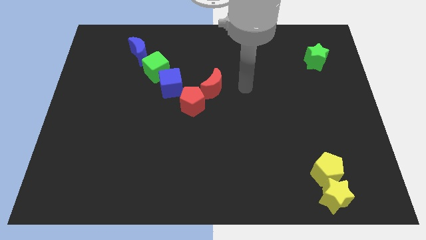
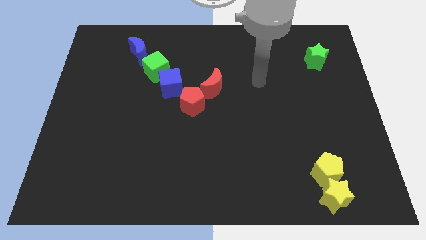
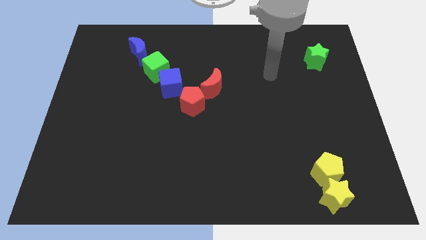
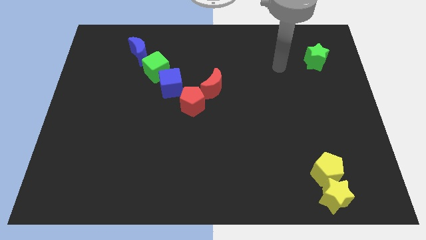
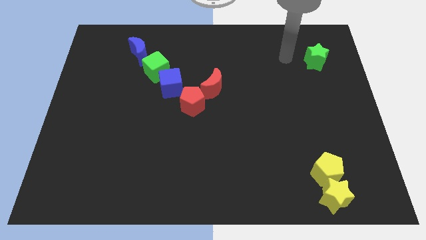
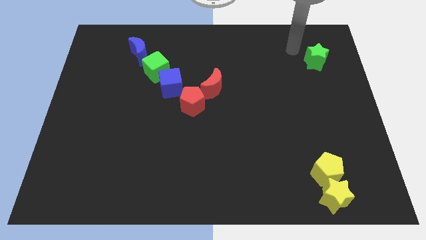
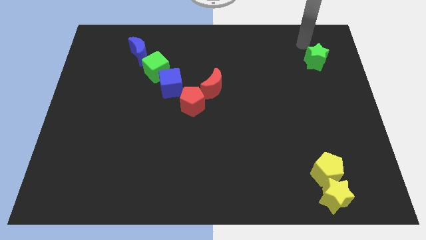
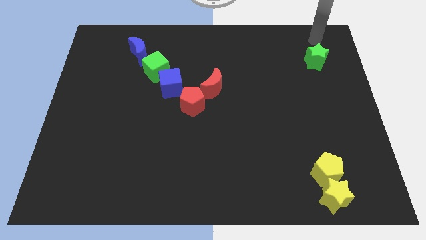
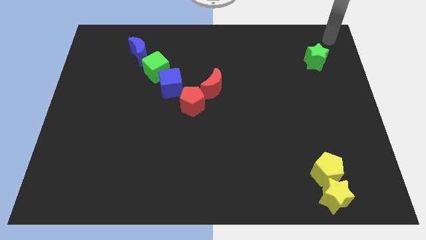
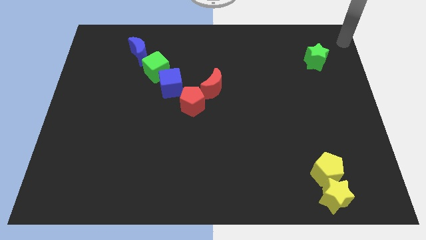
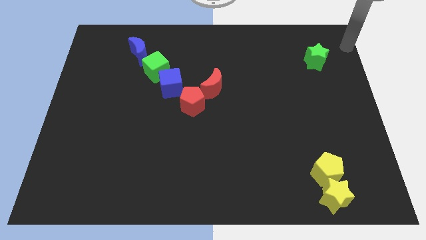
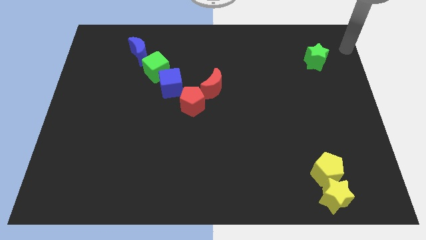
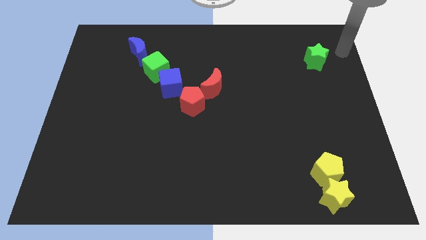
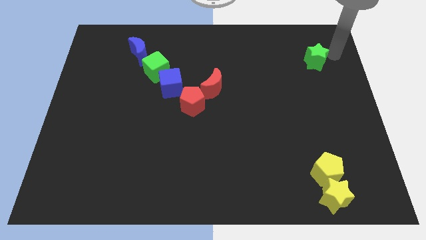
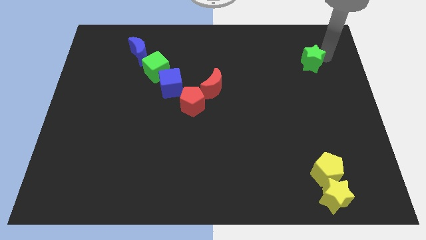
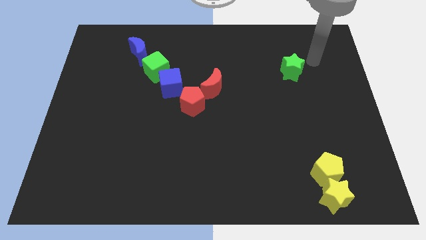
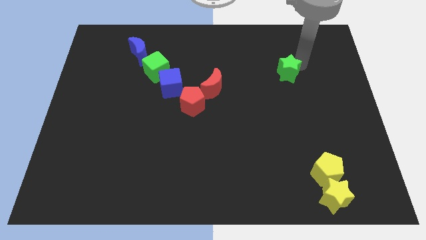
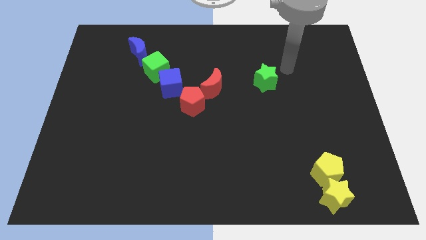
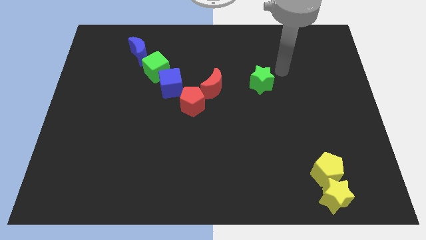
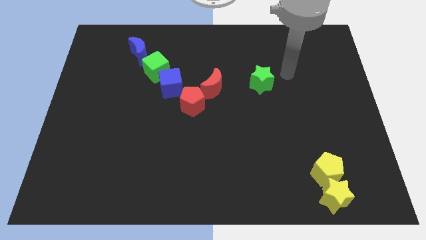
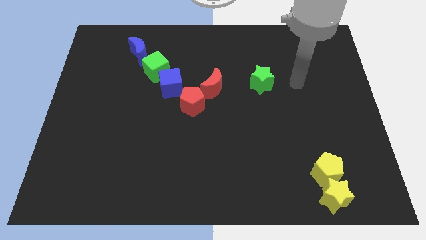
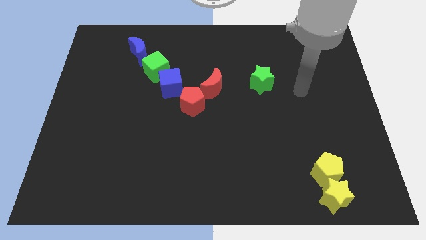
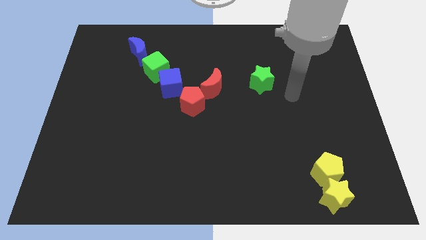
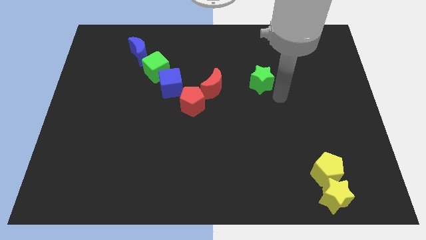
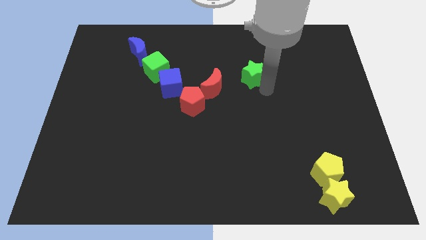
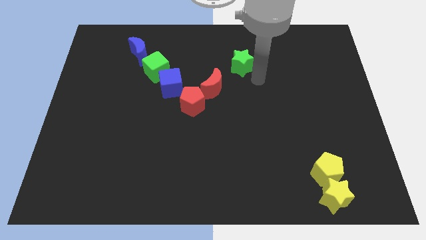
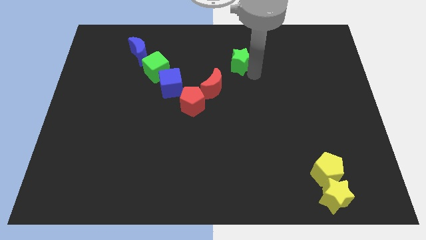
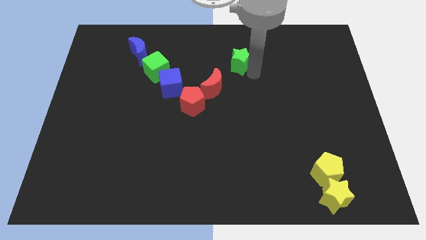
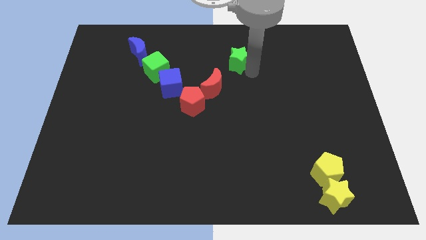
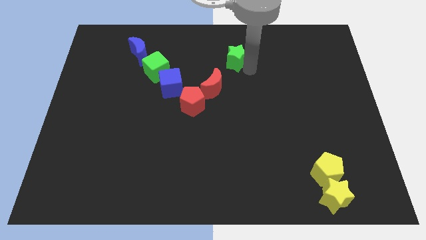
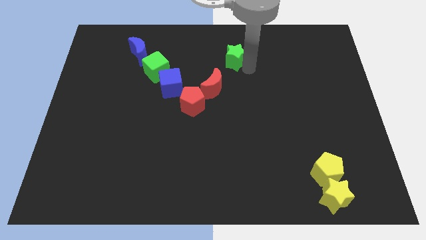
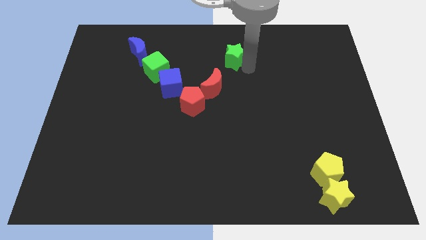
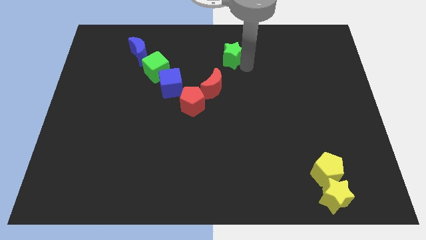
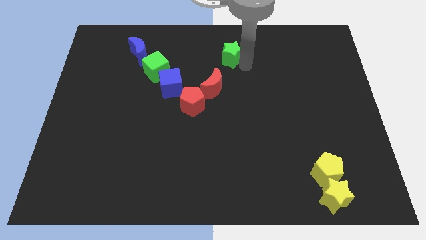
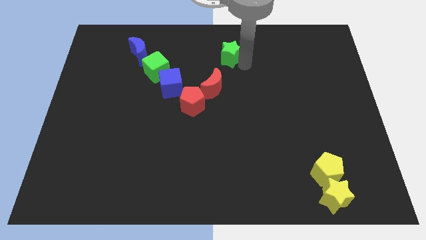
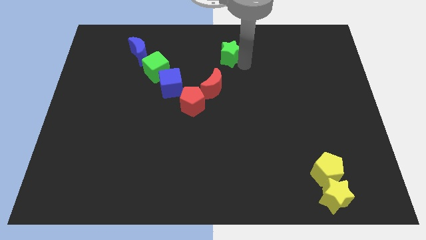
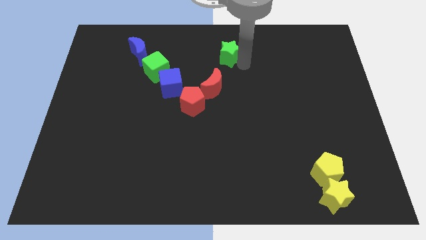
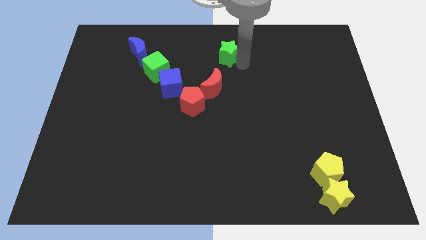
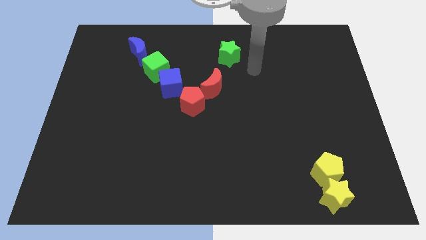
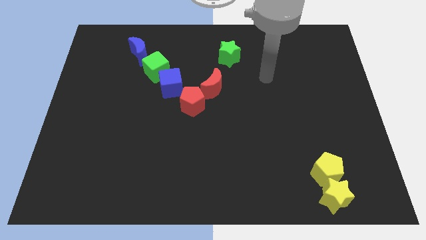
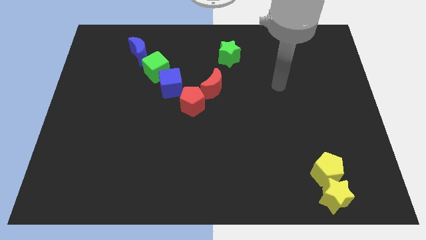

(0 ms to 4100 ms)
push the green star near to the red crescent

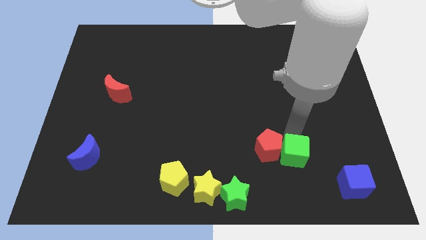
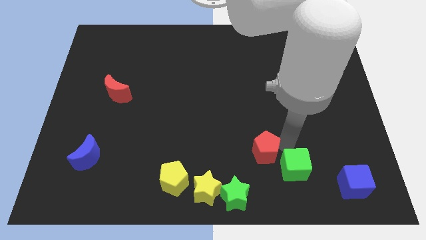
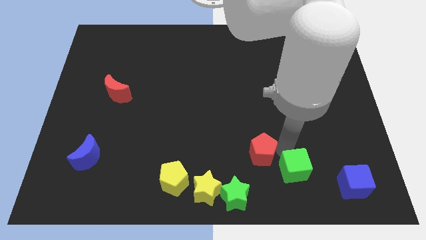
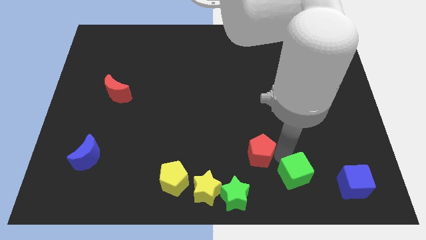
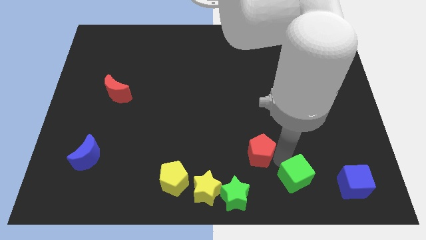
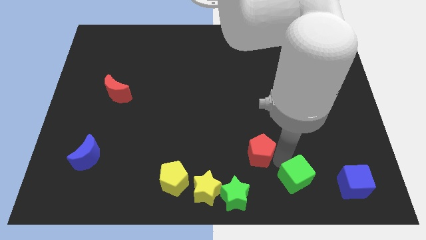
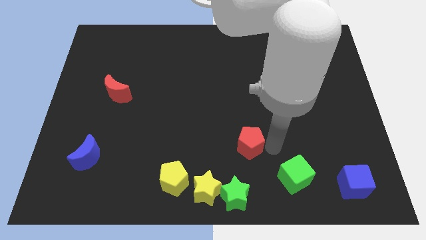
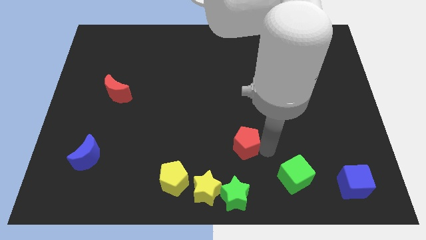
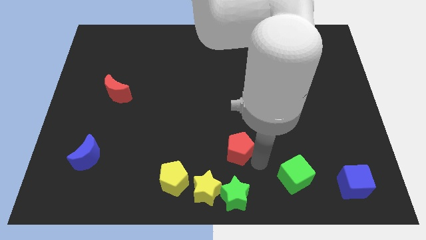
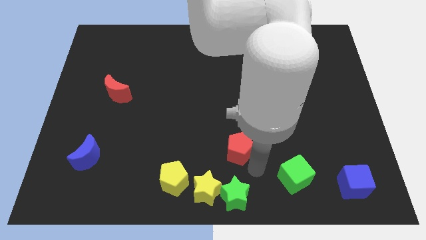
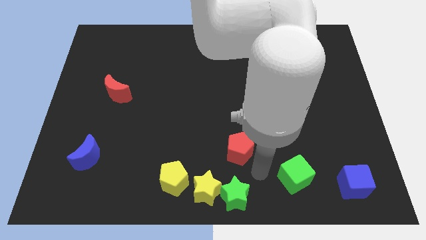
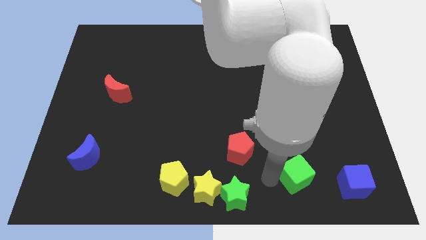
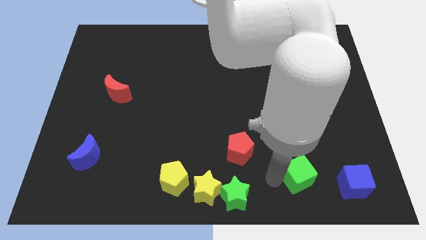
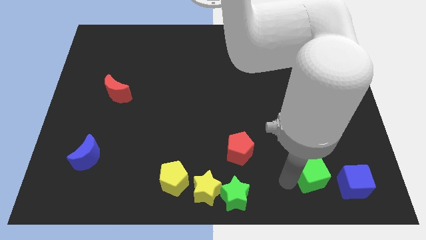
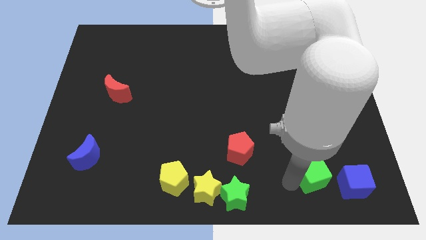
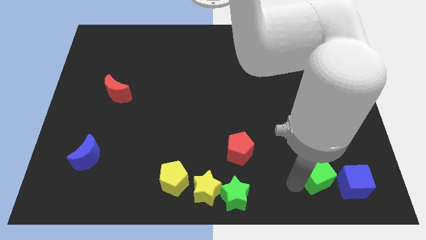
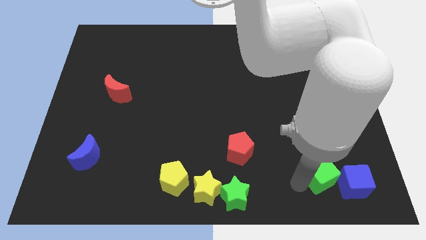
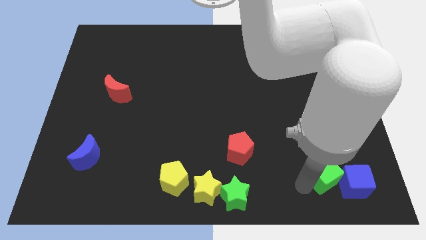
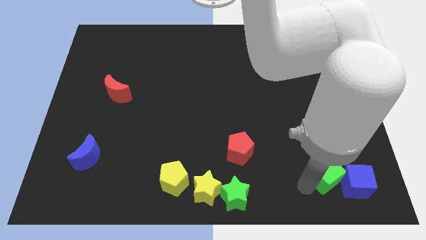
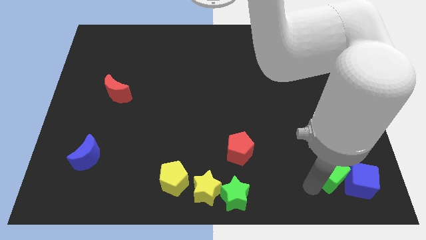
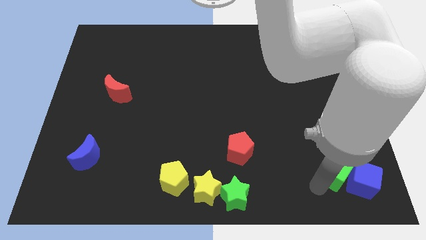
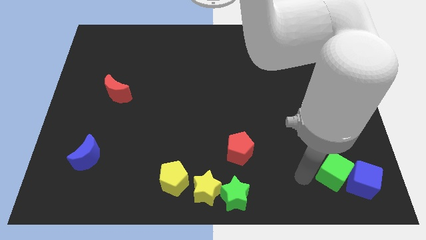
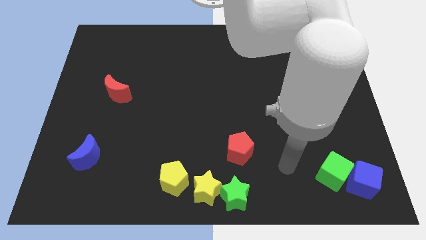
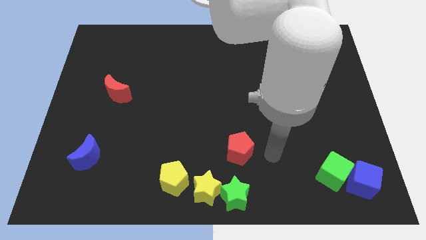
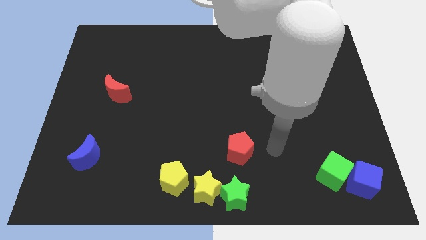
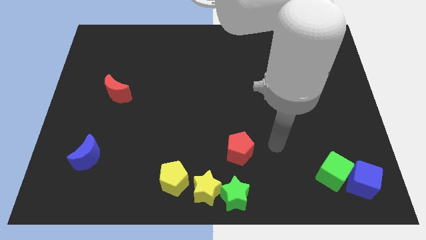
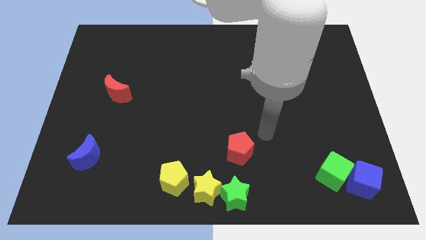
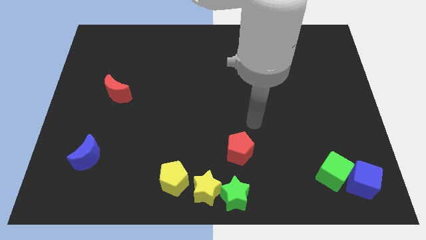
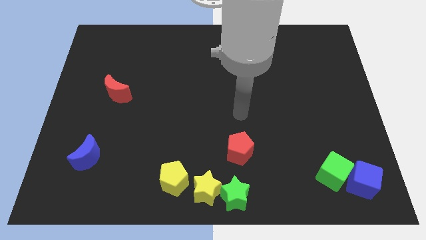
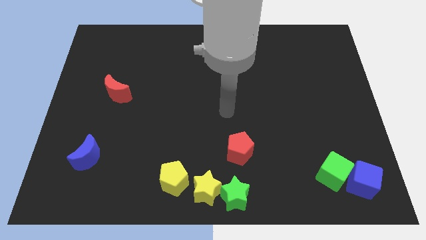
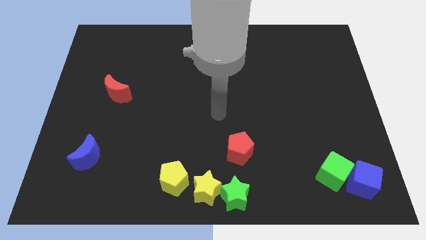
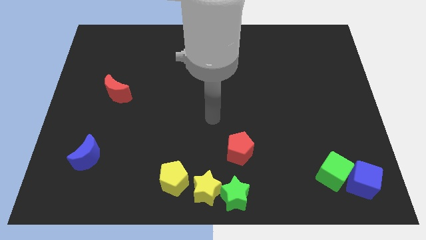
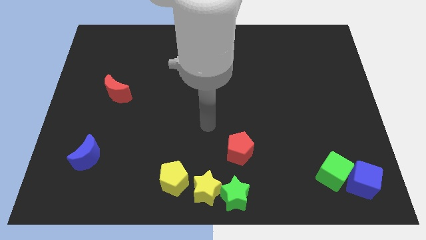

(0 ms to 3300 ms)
separate green cube and the red pentagon

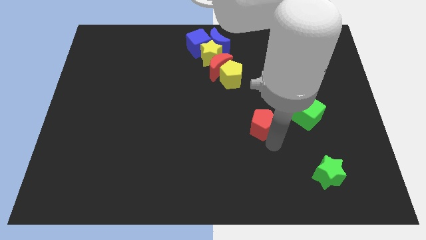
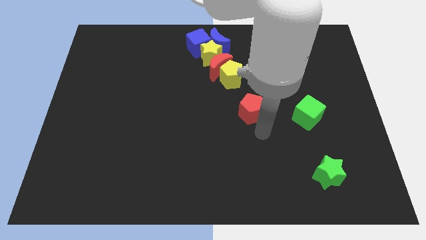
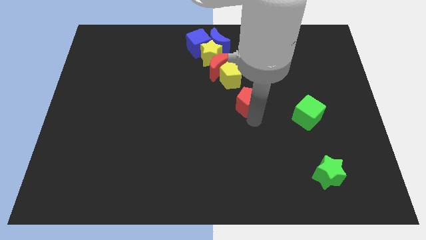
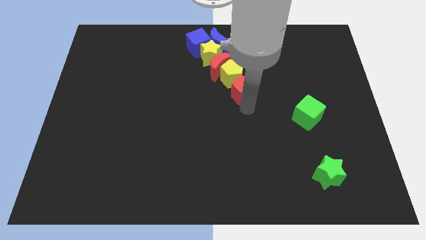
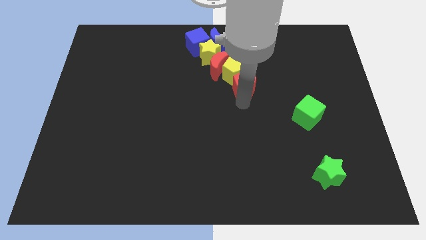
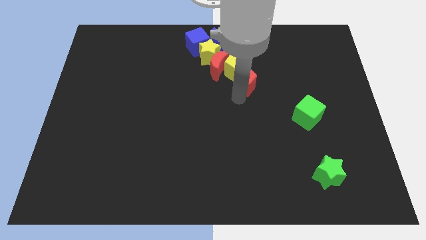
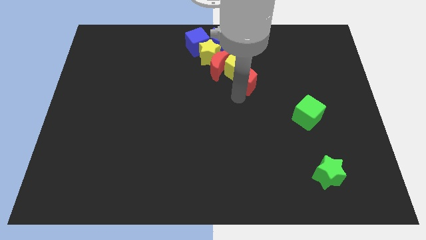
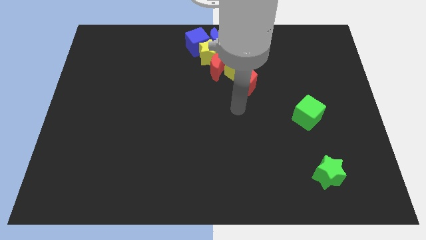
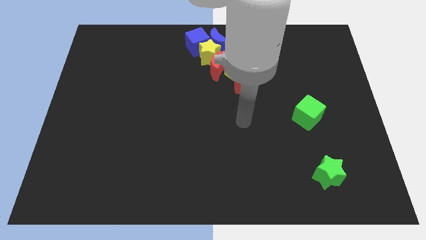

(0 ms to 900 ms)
push the red pentagon into the yellow pentagon

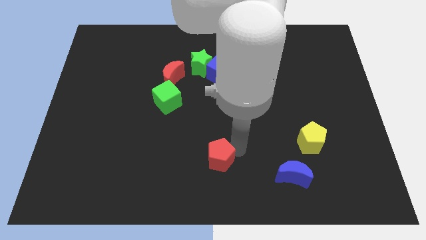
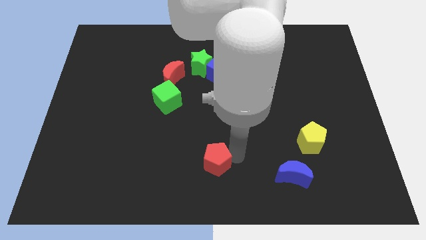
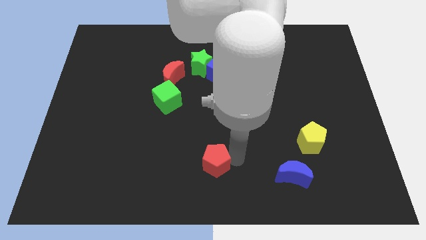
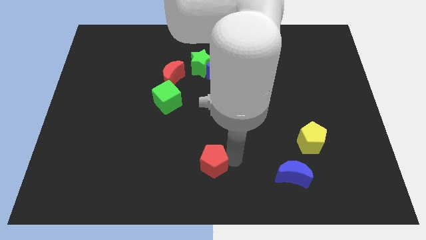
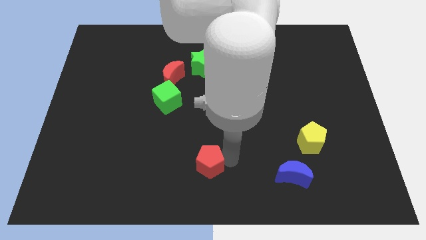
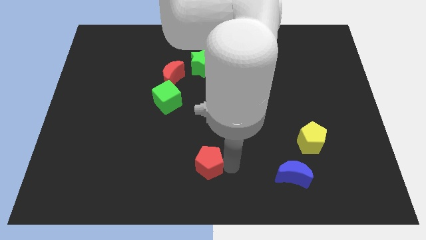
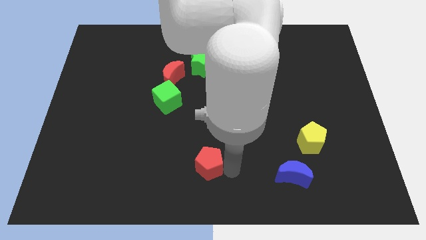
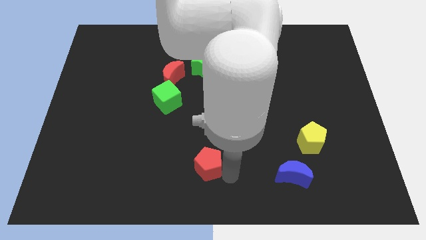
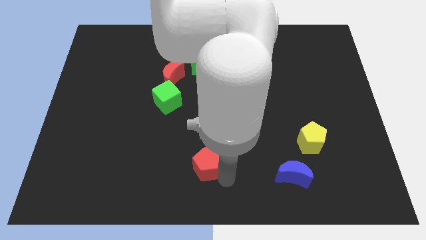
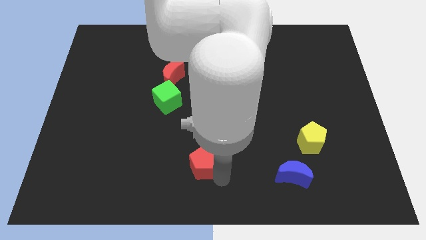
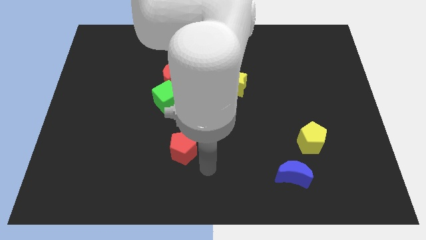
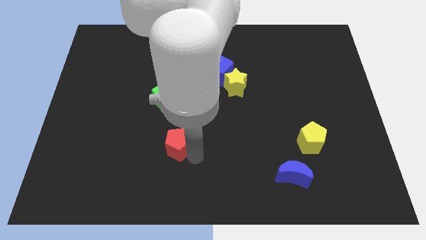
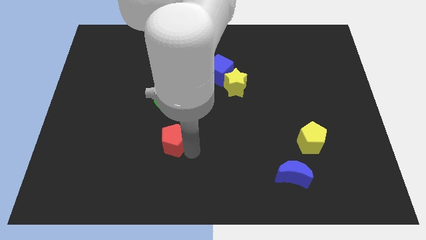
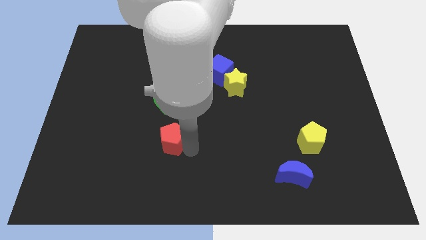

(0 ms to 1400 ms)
put the red pentagon vertically below the green cube
